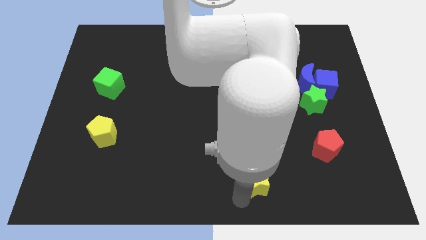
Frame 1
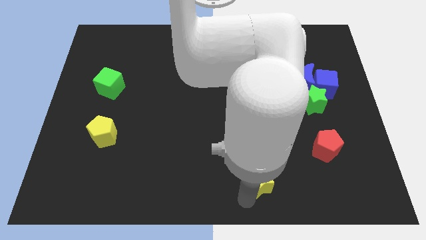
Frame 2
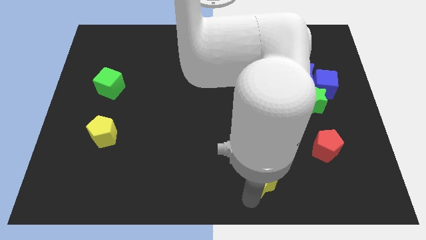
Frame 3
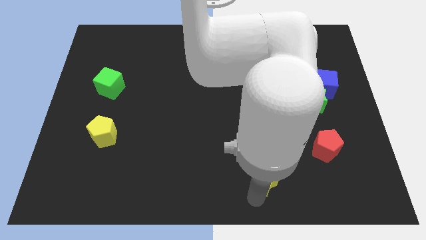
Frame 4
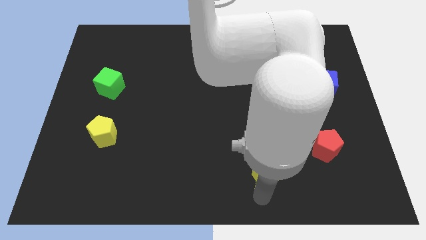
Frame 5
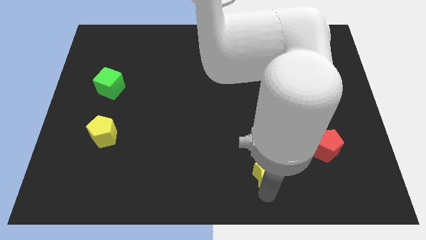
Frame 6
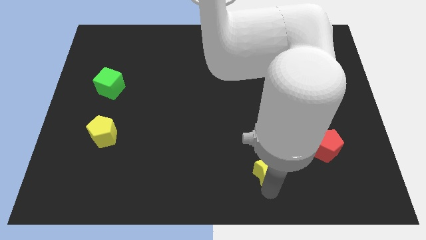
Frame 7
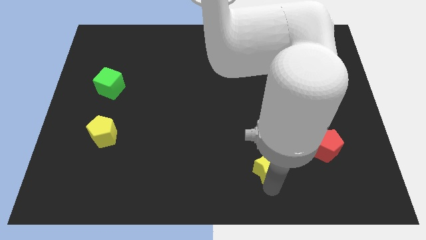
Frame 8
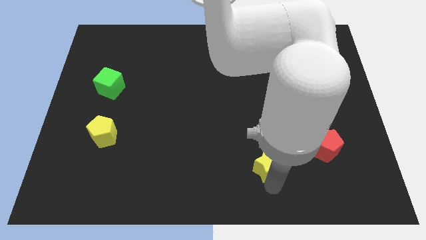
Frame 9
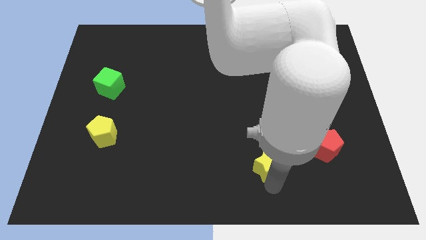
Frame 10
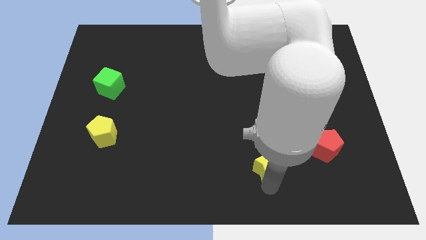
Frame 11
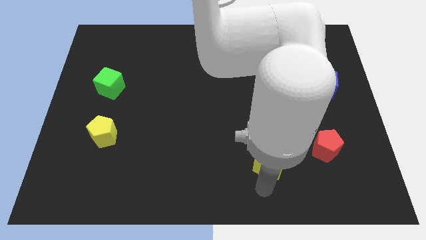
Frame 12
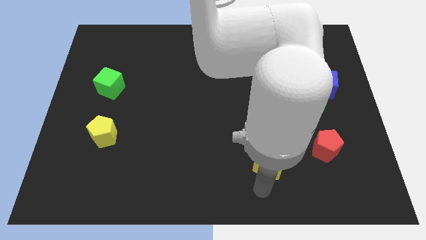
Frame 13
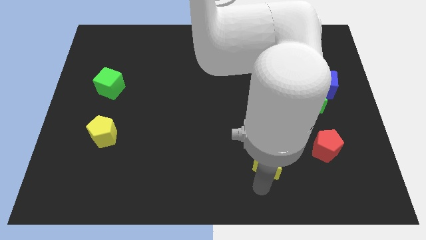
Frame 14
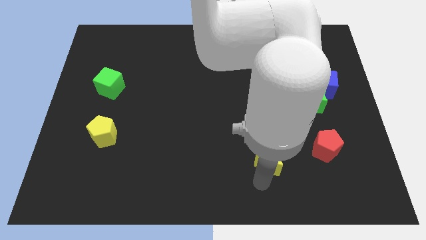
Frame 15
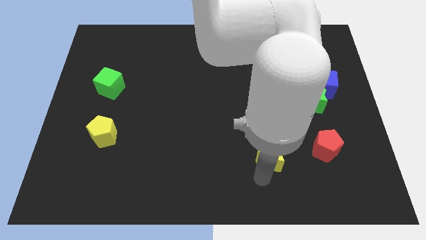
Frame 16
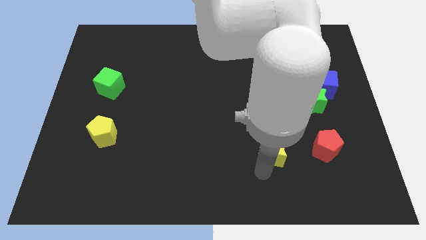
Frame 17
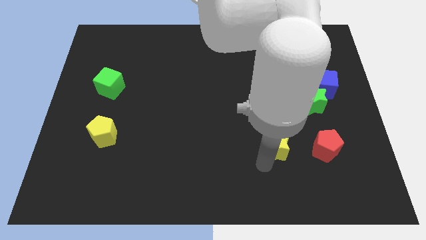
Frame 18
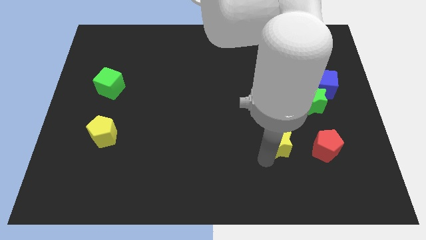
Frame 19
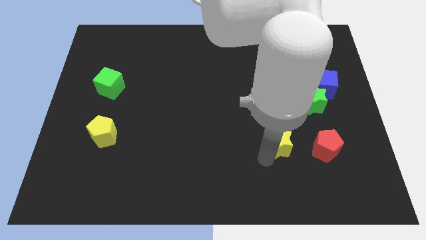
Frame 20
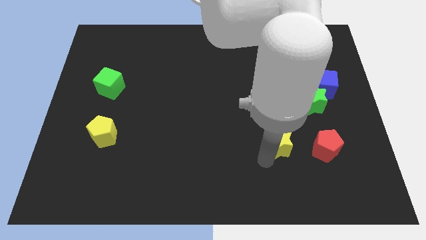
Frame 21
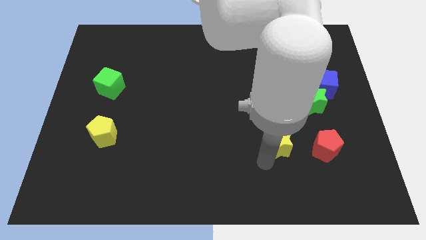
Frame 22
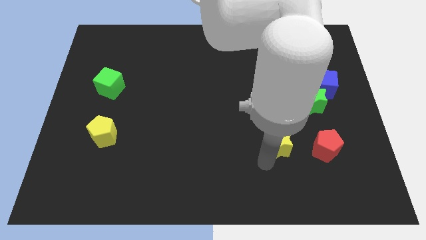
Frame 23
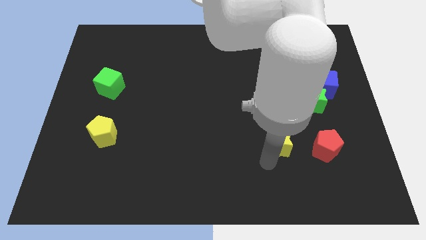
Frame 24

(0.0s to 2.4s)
put the yellow star to the left of the red pentagon

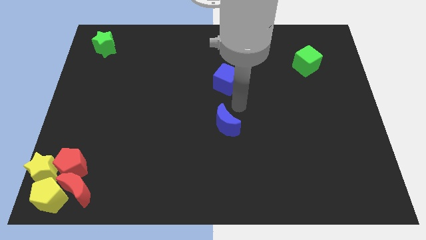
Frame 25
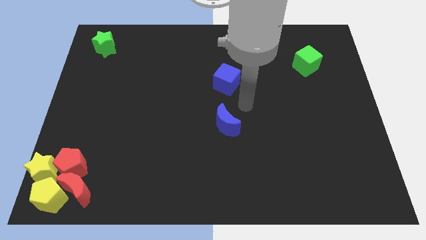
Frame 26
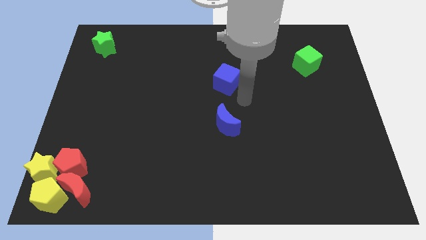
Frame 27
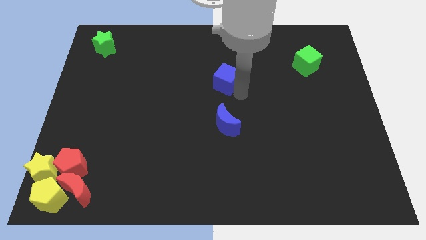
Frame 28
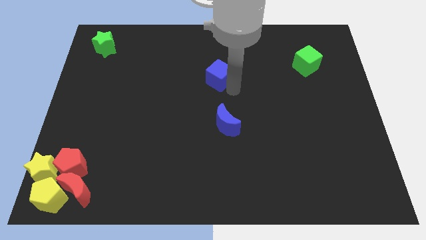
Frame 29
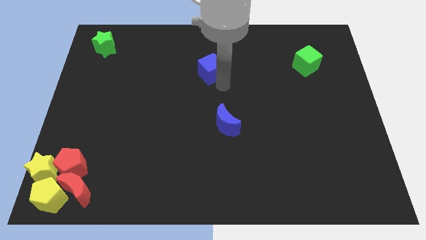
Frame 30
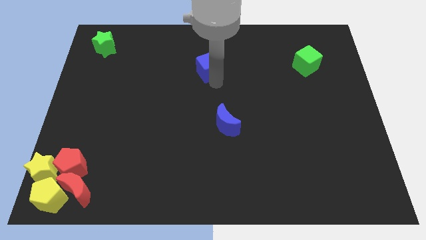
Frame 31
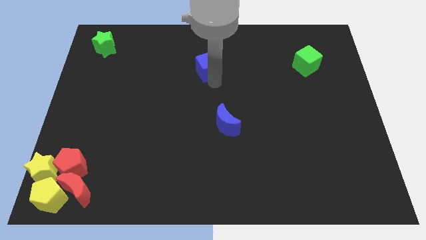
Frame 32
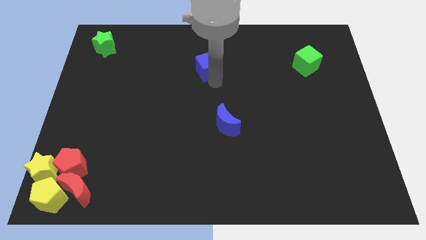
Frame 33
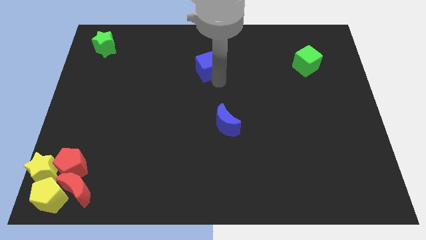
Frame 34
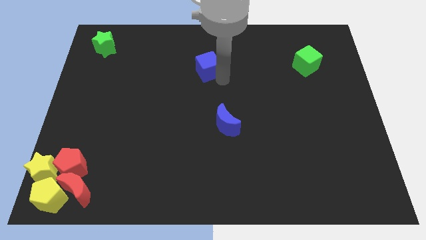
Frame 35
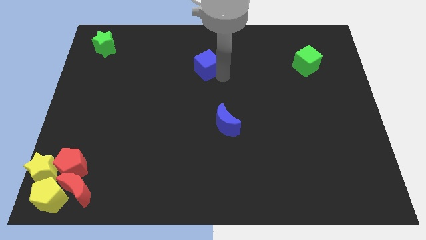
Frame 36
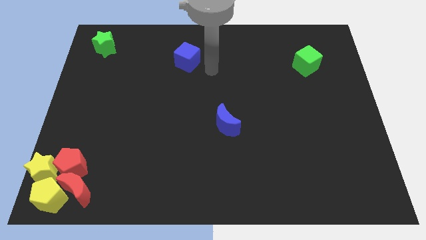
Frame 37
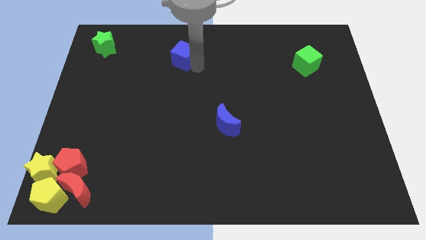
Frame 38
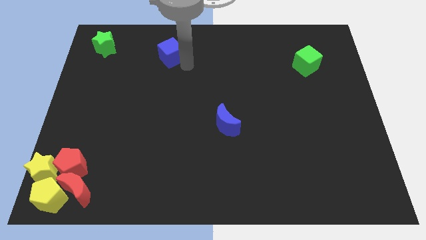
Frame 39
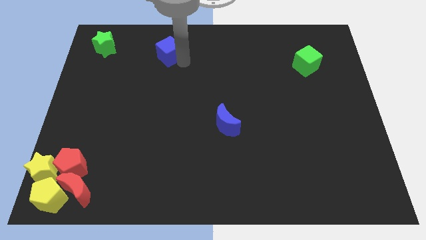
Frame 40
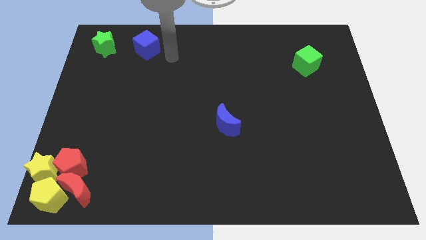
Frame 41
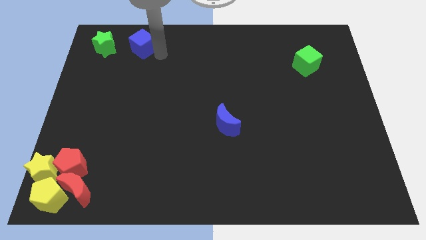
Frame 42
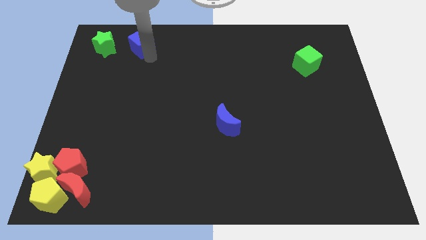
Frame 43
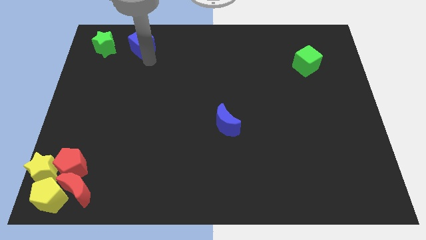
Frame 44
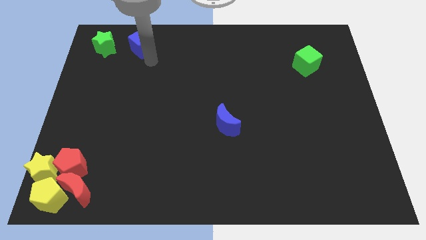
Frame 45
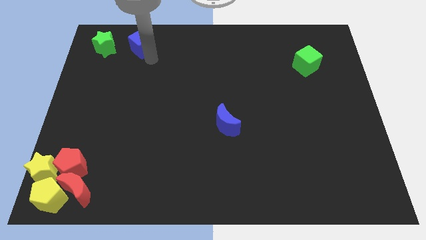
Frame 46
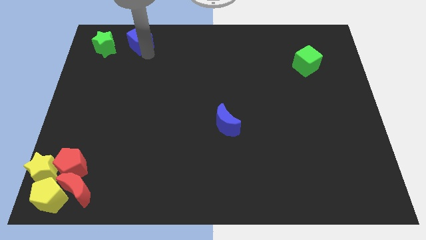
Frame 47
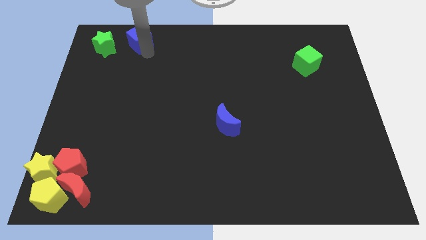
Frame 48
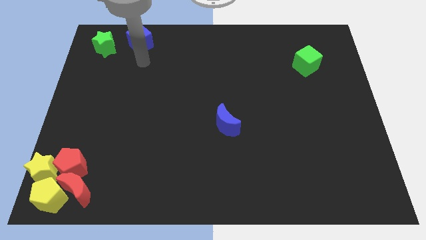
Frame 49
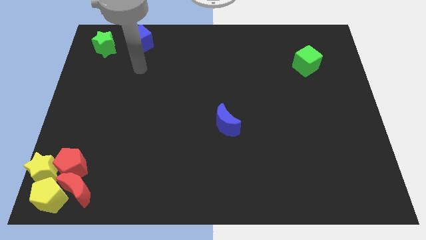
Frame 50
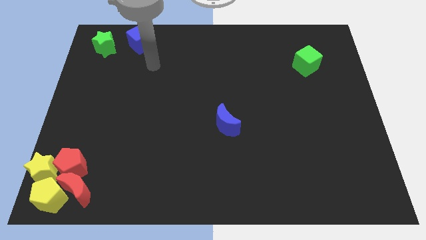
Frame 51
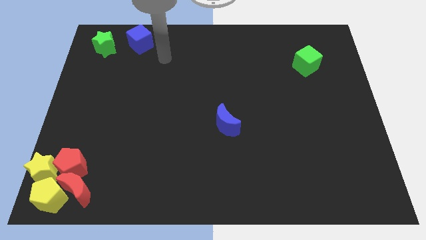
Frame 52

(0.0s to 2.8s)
place the blue cube to the right of the green star

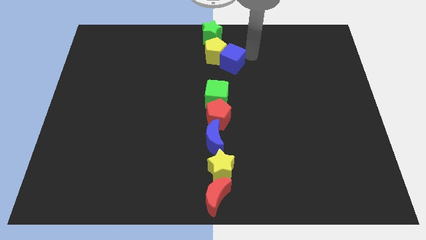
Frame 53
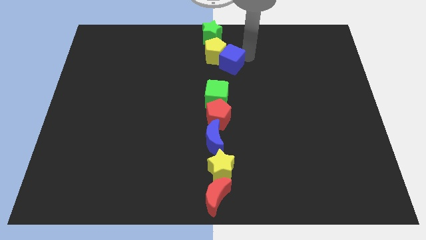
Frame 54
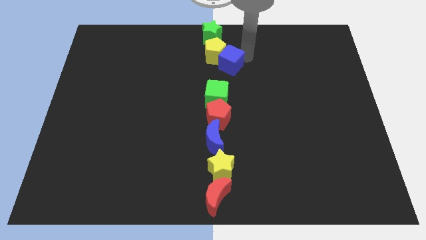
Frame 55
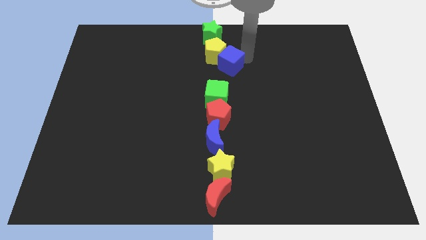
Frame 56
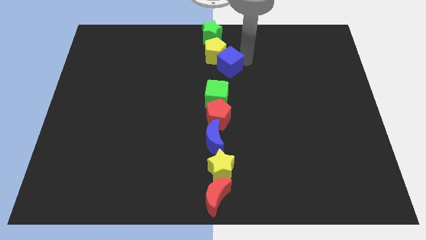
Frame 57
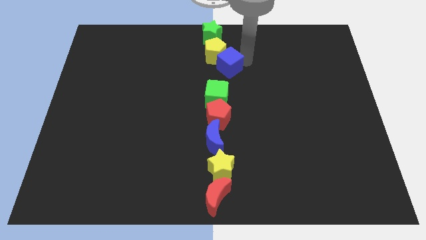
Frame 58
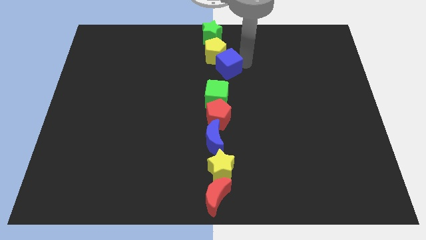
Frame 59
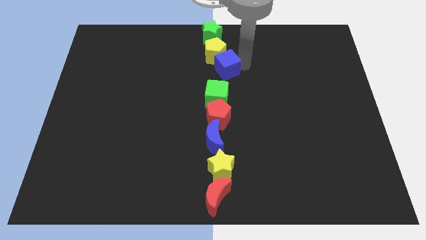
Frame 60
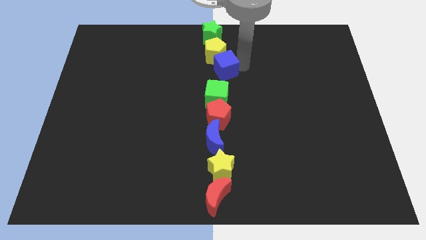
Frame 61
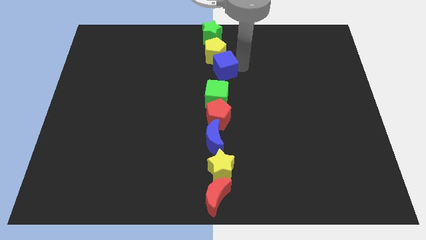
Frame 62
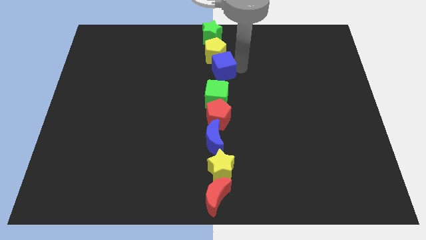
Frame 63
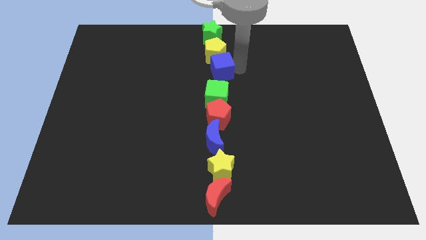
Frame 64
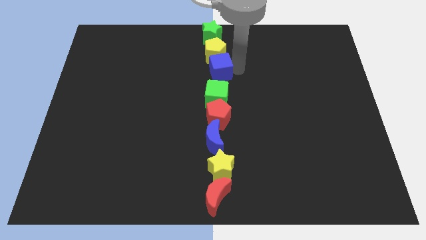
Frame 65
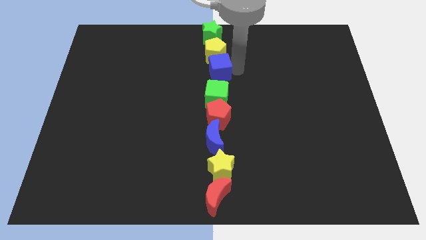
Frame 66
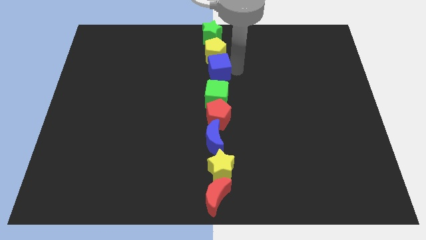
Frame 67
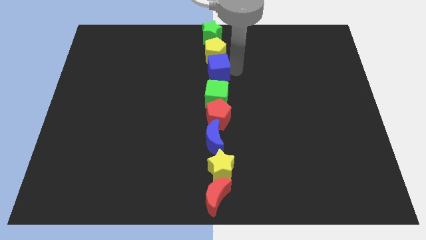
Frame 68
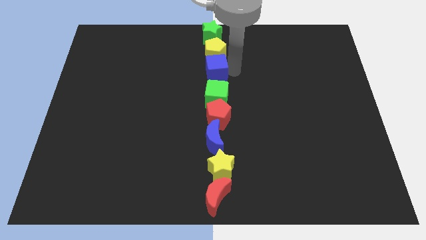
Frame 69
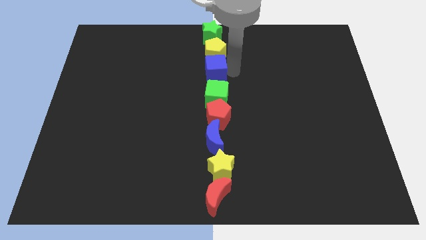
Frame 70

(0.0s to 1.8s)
push the blue cube below the yellow pentagon

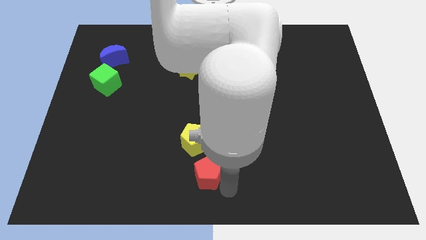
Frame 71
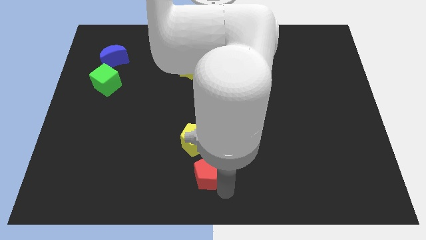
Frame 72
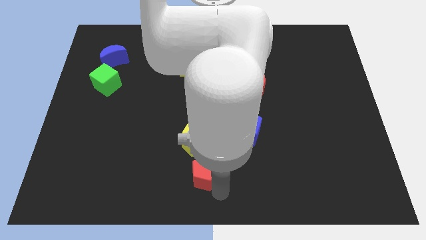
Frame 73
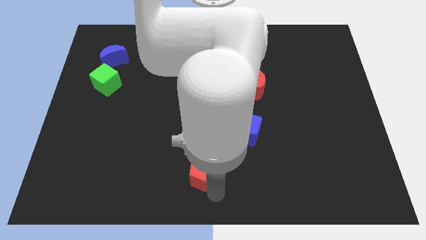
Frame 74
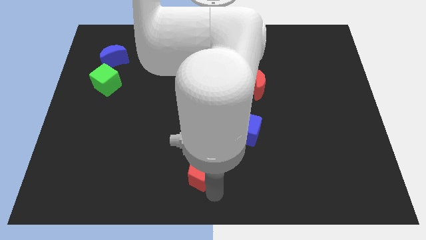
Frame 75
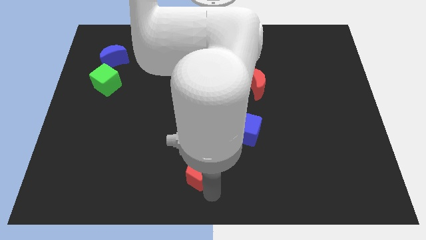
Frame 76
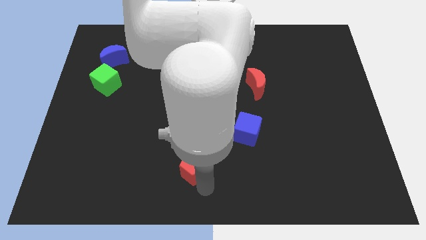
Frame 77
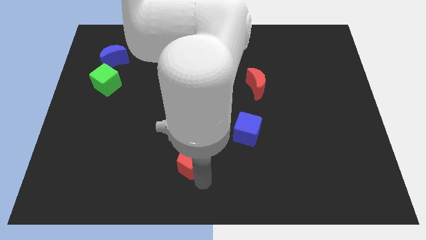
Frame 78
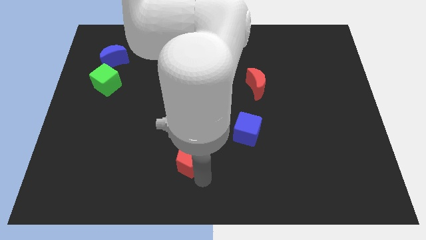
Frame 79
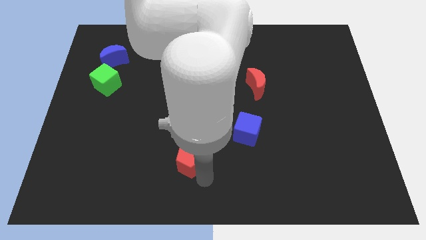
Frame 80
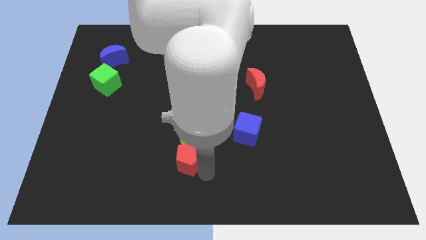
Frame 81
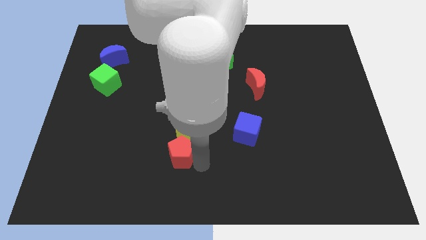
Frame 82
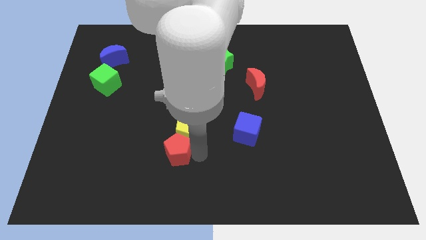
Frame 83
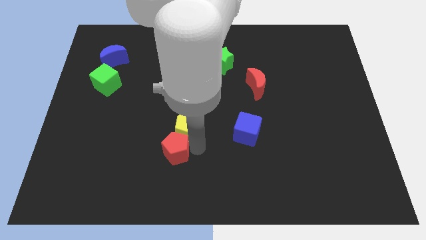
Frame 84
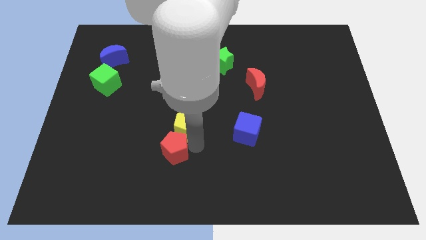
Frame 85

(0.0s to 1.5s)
place the red pentagon below the yellow pentagon

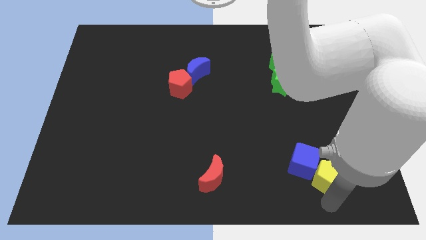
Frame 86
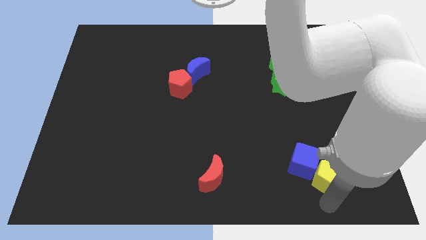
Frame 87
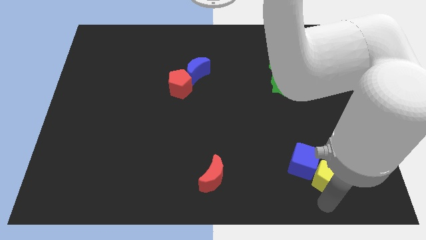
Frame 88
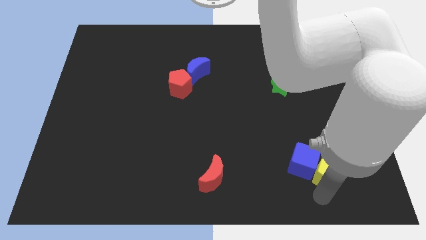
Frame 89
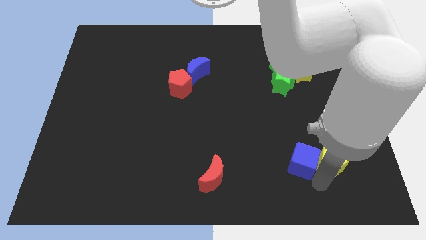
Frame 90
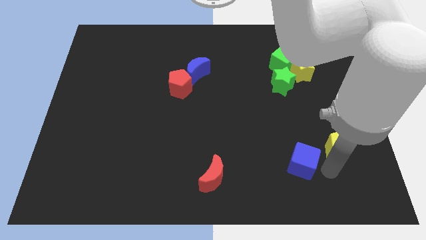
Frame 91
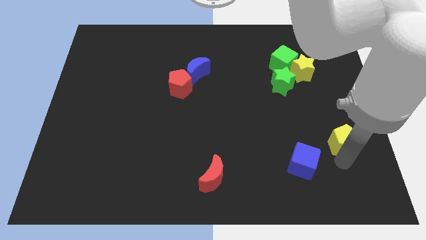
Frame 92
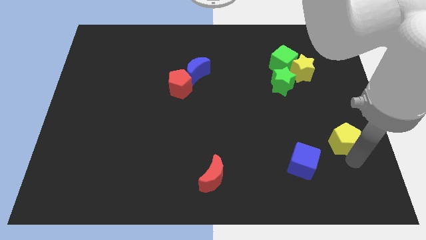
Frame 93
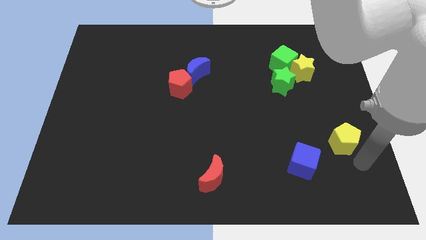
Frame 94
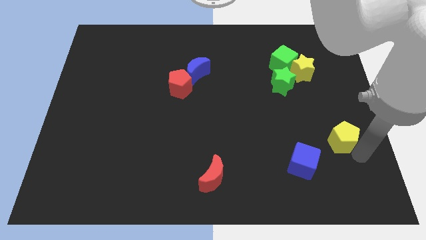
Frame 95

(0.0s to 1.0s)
separate the yellow pentagon from the blue cube
